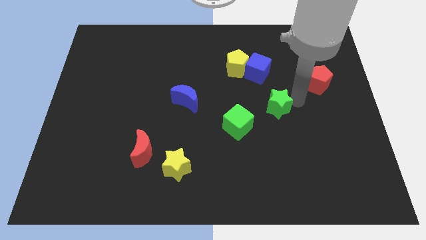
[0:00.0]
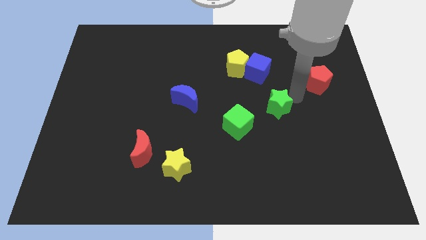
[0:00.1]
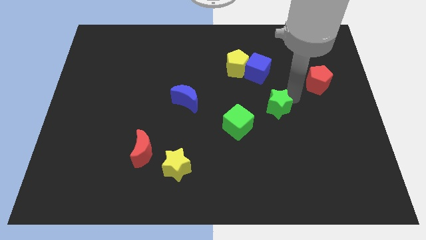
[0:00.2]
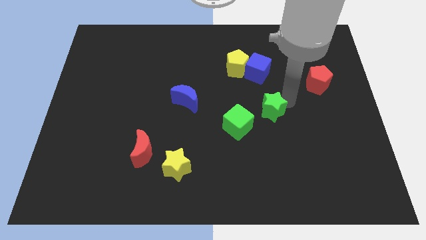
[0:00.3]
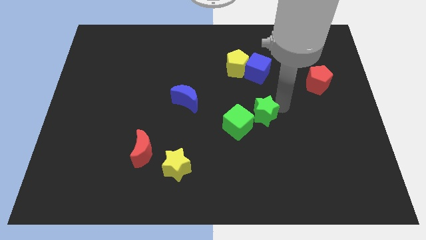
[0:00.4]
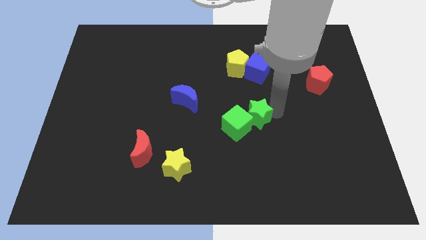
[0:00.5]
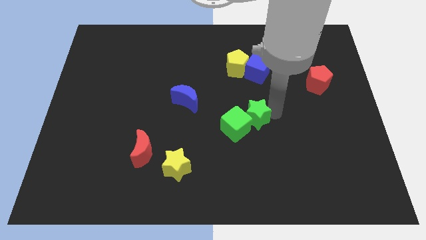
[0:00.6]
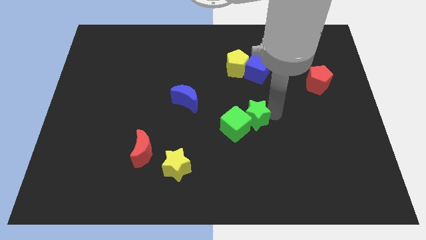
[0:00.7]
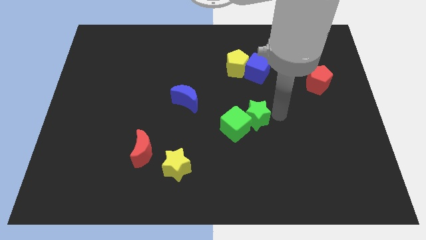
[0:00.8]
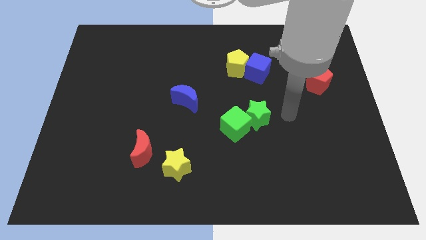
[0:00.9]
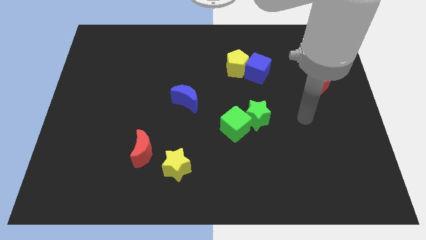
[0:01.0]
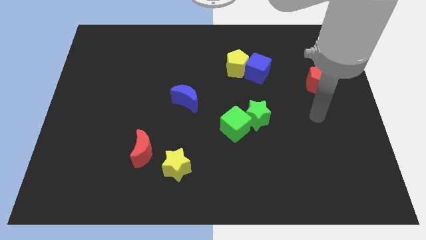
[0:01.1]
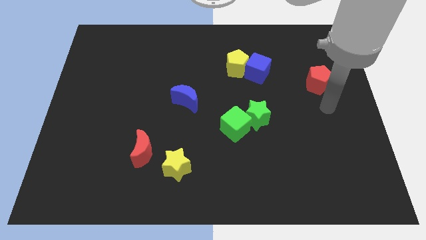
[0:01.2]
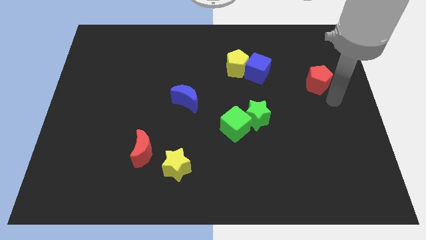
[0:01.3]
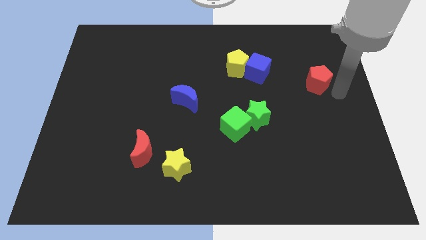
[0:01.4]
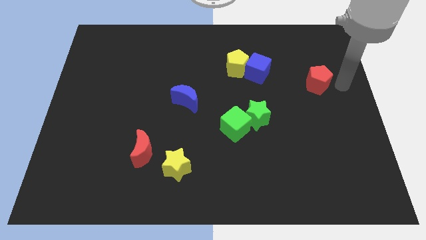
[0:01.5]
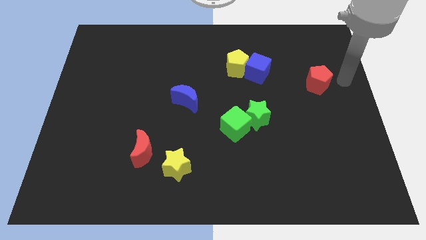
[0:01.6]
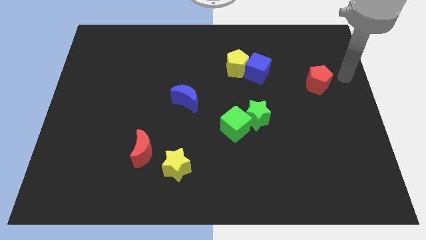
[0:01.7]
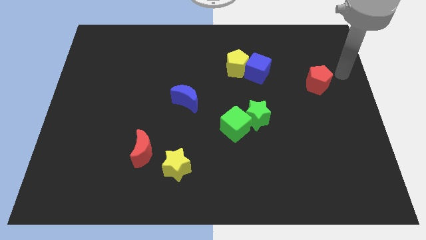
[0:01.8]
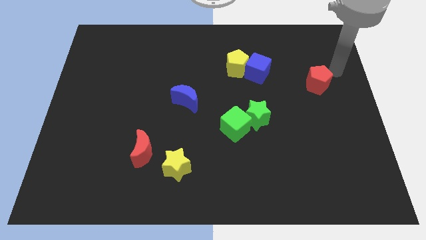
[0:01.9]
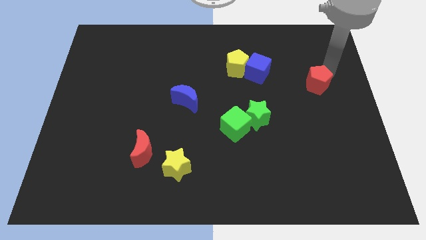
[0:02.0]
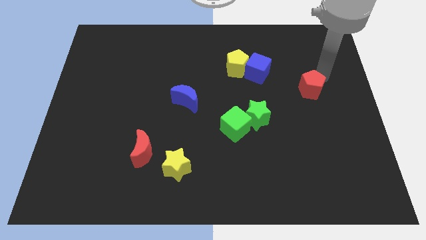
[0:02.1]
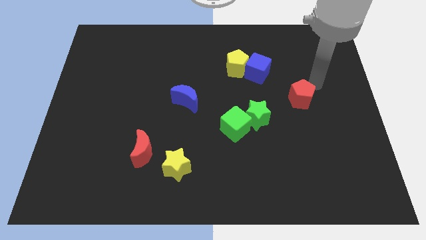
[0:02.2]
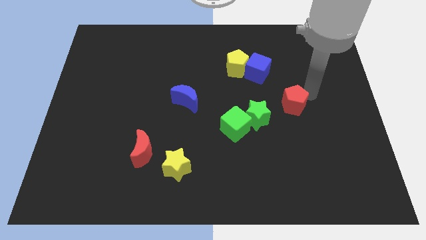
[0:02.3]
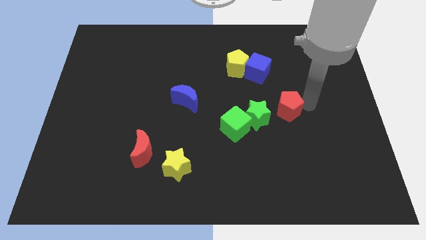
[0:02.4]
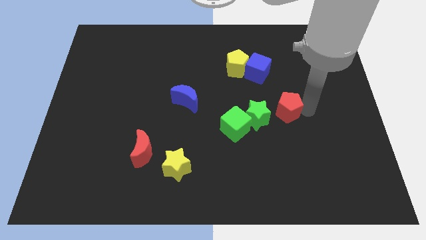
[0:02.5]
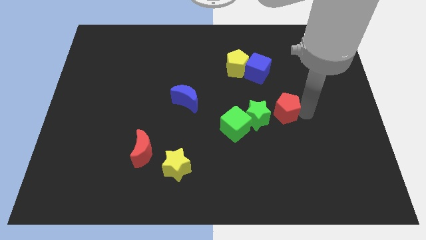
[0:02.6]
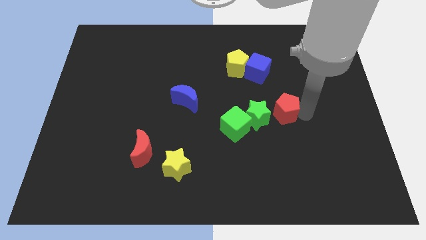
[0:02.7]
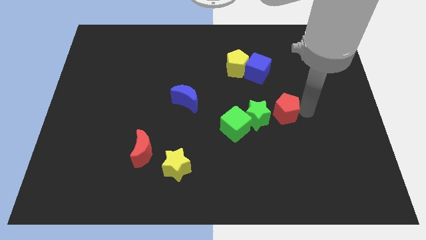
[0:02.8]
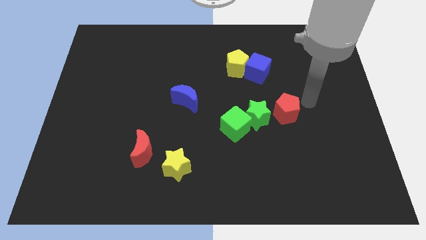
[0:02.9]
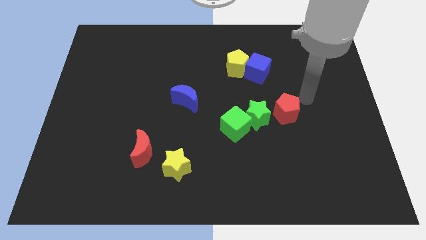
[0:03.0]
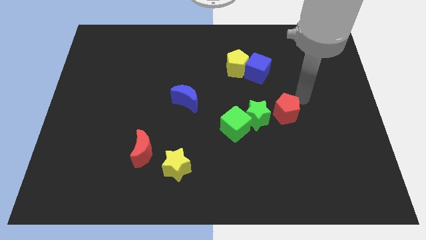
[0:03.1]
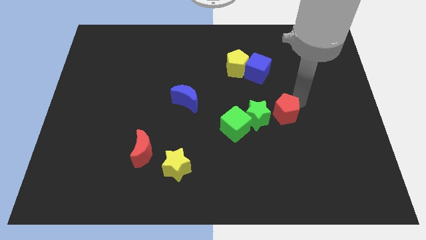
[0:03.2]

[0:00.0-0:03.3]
move the green star and red pentagon into the green cube

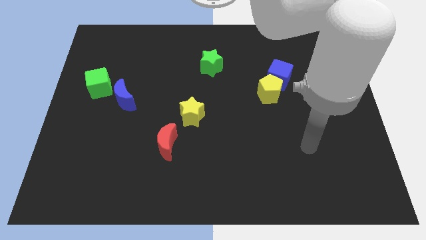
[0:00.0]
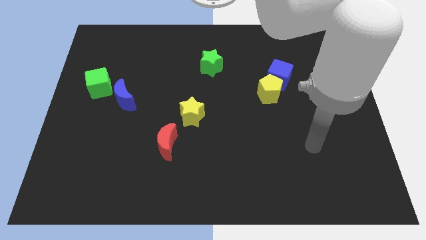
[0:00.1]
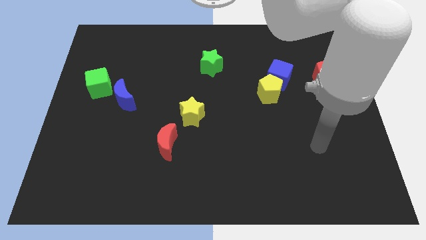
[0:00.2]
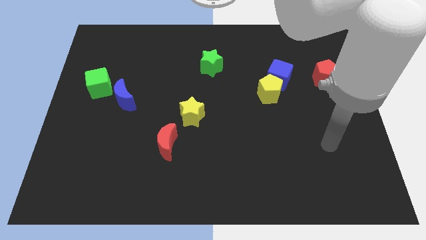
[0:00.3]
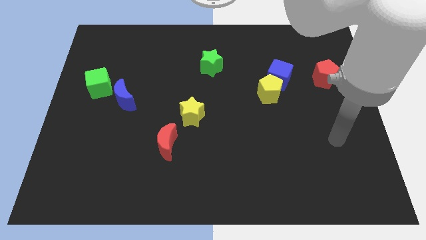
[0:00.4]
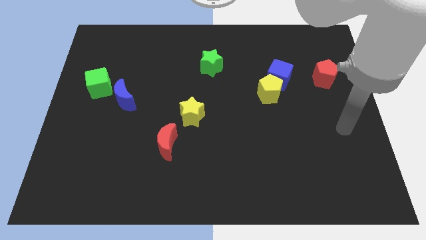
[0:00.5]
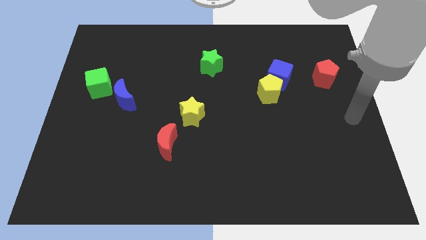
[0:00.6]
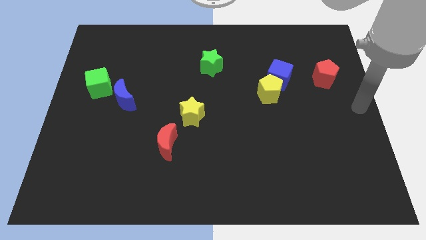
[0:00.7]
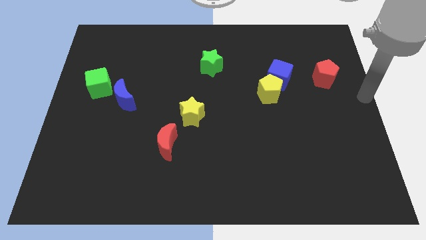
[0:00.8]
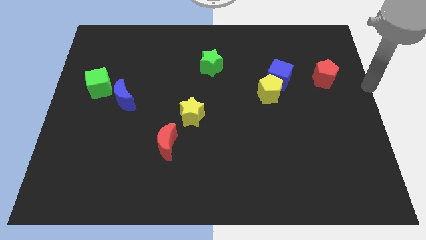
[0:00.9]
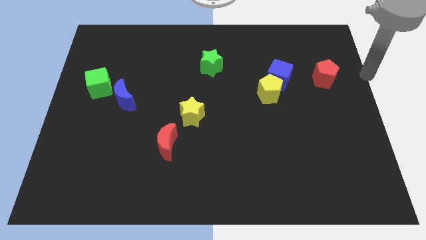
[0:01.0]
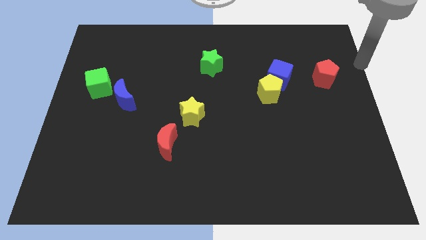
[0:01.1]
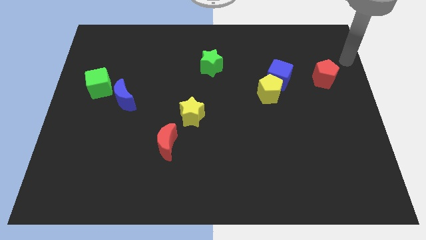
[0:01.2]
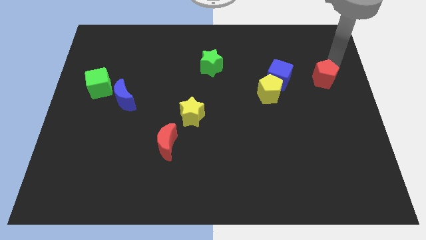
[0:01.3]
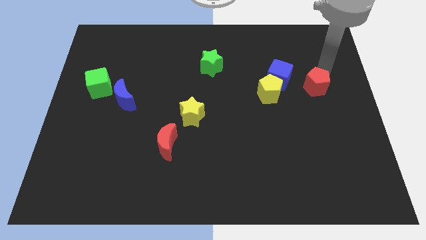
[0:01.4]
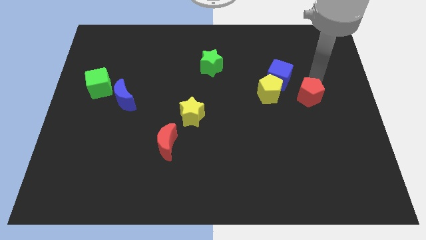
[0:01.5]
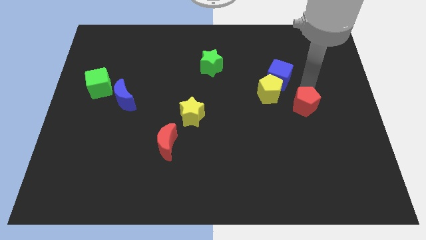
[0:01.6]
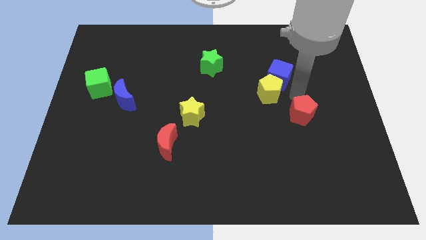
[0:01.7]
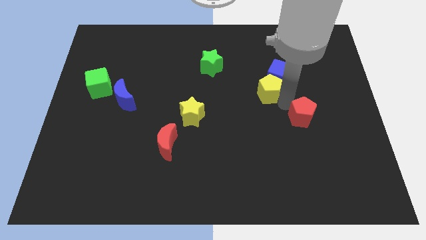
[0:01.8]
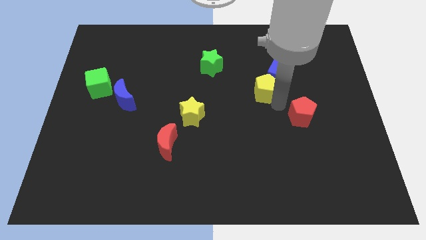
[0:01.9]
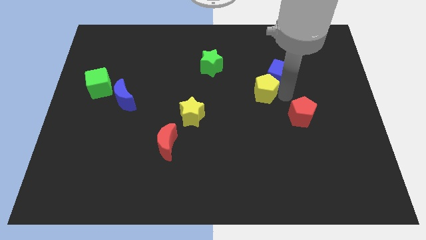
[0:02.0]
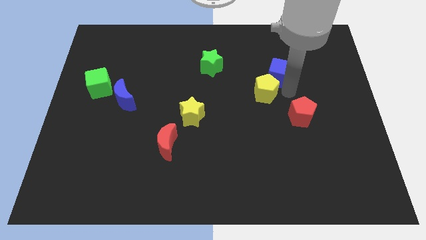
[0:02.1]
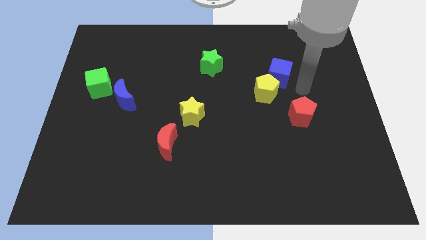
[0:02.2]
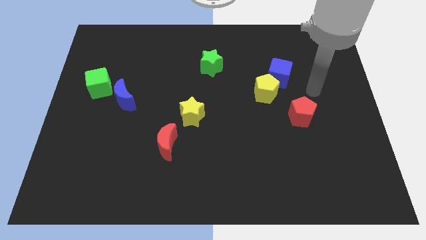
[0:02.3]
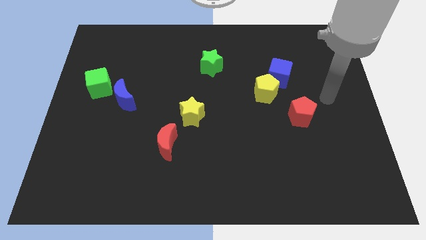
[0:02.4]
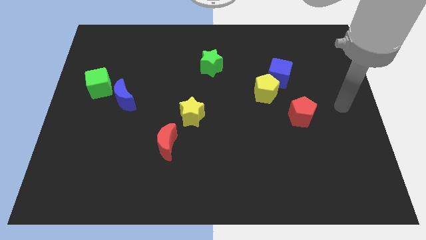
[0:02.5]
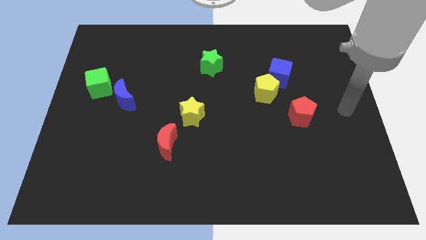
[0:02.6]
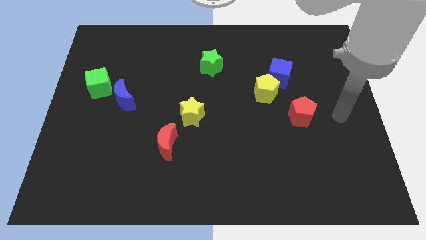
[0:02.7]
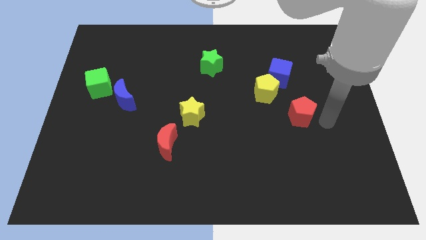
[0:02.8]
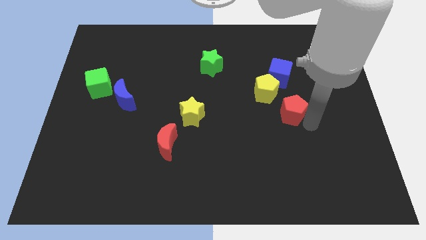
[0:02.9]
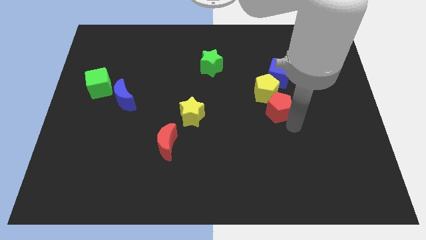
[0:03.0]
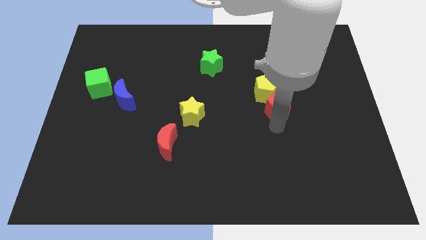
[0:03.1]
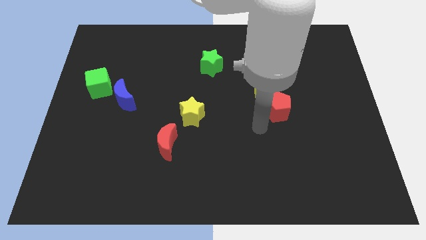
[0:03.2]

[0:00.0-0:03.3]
place the red pentagon under the yellow pentagon

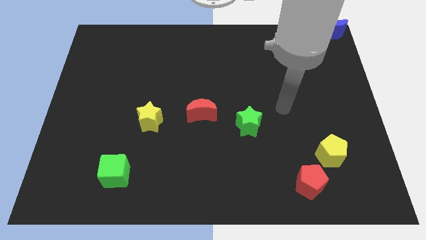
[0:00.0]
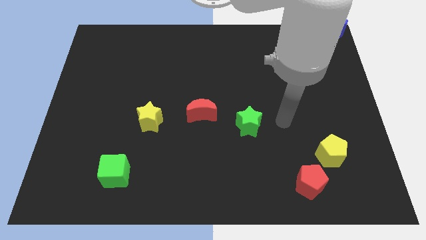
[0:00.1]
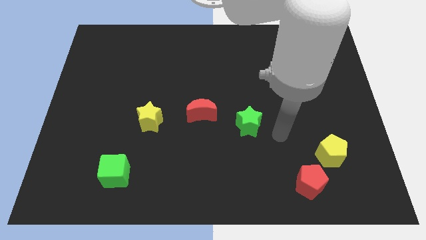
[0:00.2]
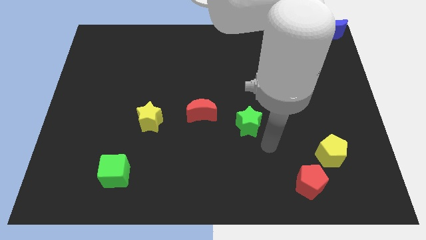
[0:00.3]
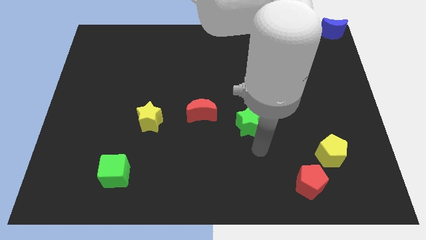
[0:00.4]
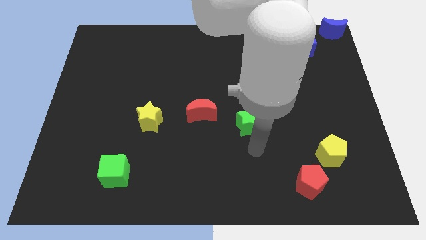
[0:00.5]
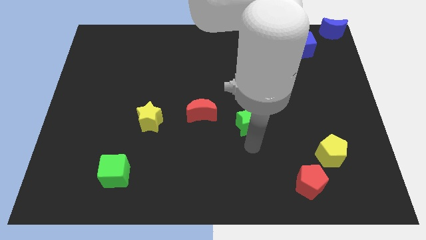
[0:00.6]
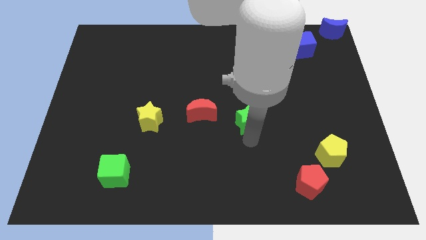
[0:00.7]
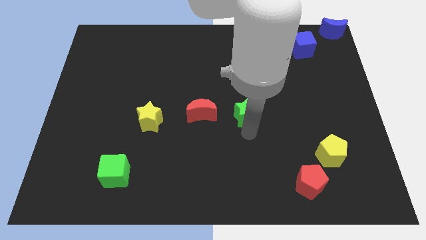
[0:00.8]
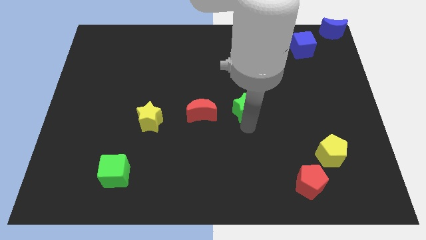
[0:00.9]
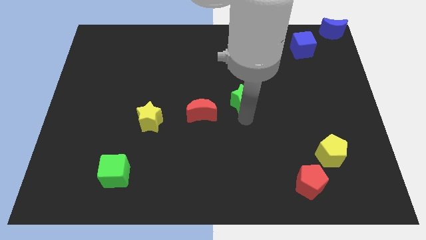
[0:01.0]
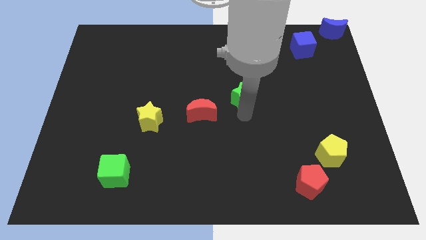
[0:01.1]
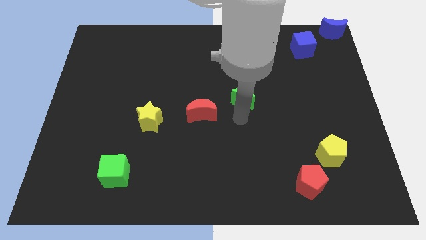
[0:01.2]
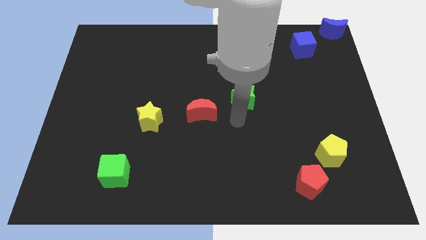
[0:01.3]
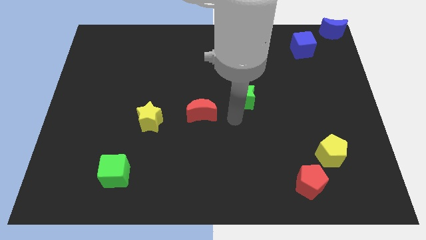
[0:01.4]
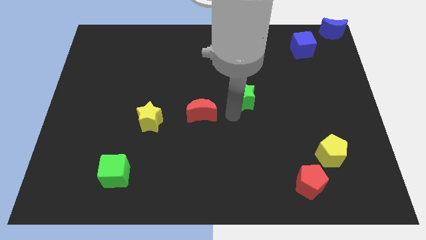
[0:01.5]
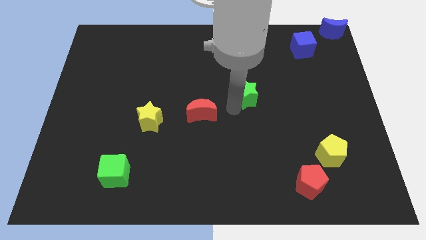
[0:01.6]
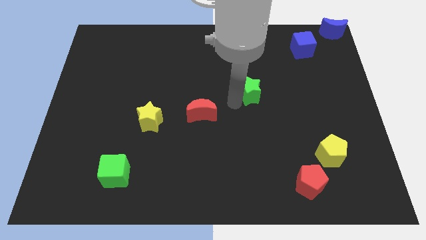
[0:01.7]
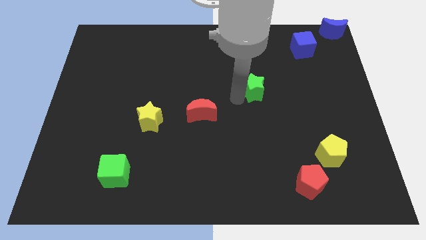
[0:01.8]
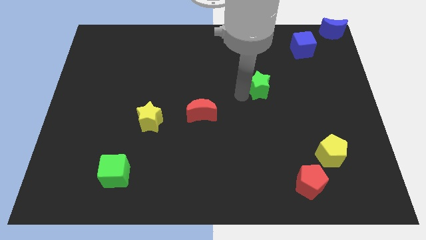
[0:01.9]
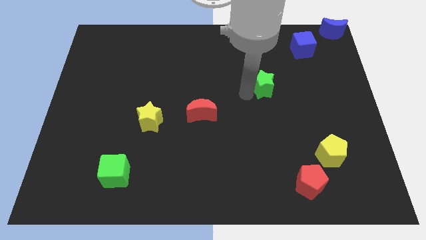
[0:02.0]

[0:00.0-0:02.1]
move the green star towards the blue cube

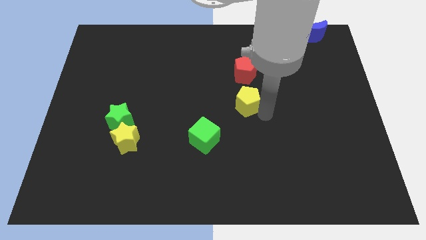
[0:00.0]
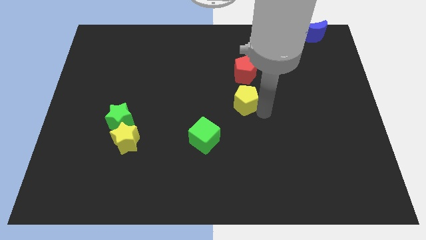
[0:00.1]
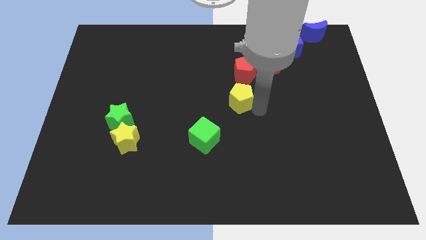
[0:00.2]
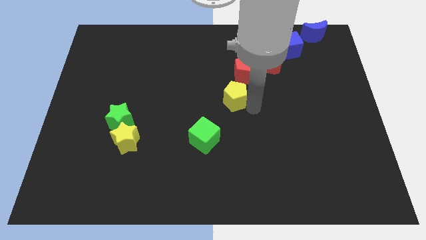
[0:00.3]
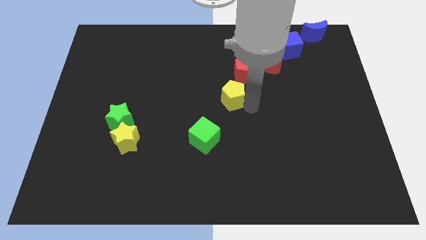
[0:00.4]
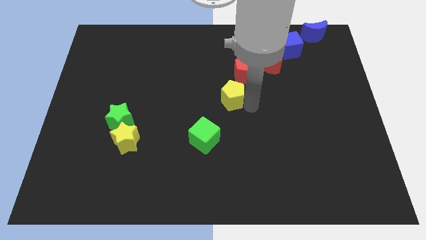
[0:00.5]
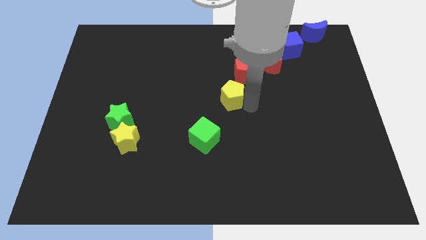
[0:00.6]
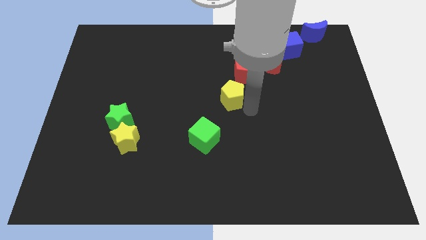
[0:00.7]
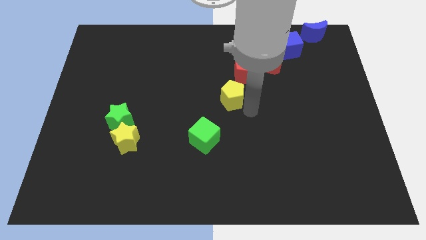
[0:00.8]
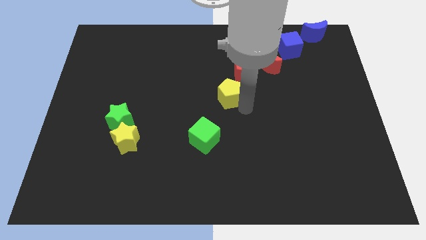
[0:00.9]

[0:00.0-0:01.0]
put the yellow pentagon in between the red pentagon and green cube
